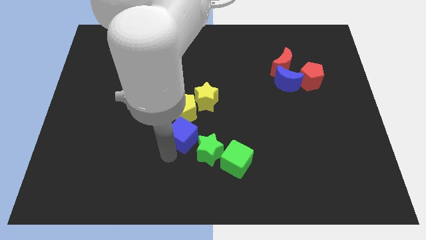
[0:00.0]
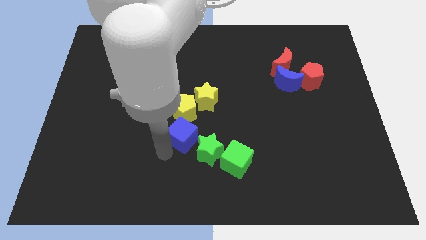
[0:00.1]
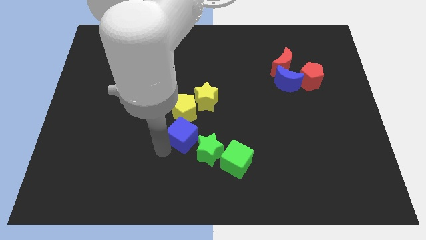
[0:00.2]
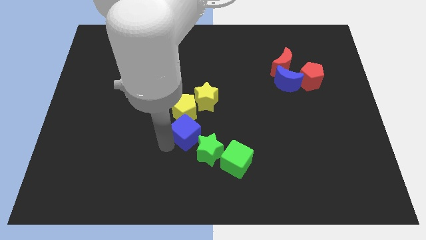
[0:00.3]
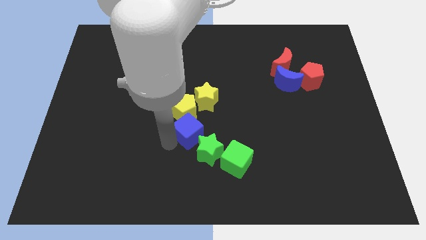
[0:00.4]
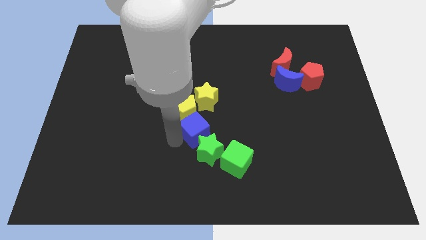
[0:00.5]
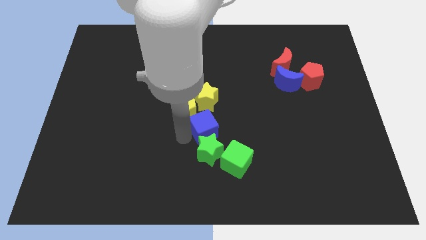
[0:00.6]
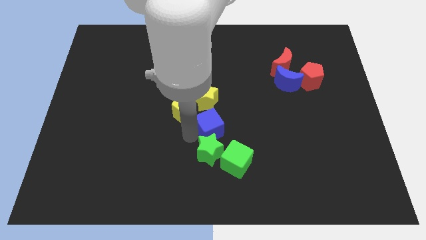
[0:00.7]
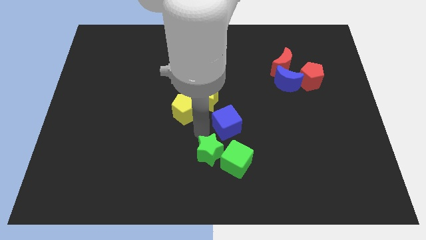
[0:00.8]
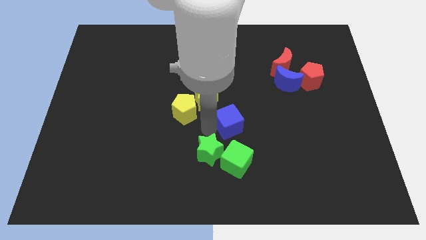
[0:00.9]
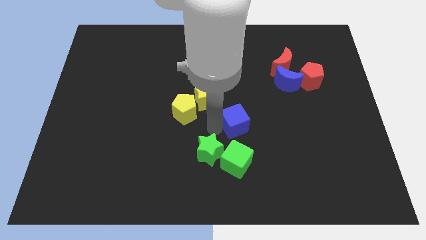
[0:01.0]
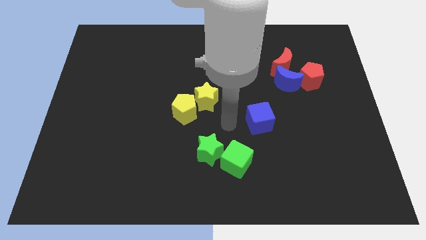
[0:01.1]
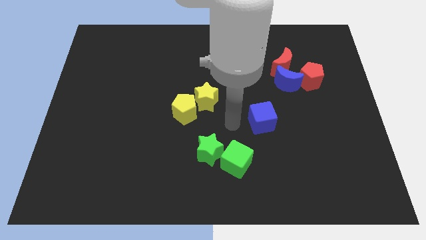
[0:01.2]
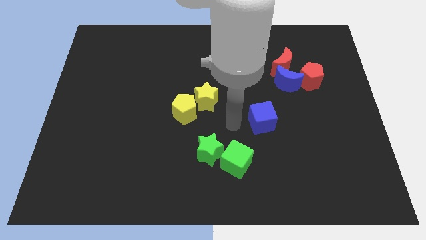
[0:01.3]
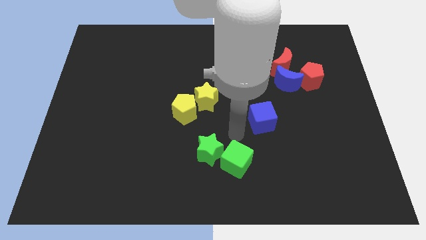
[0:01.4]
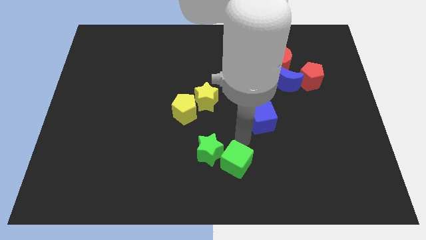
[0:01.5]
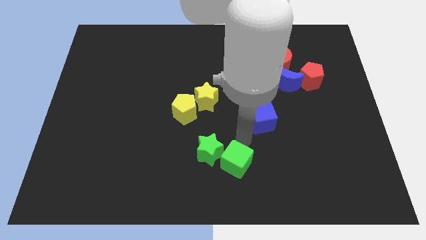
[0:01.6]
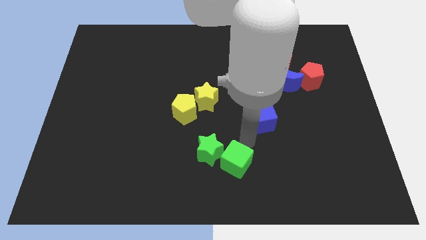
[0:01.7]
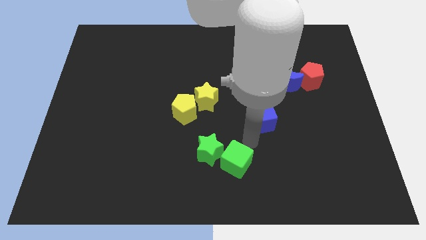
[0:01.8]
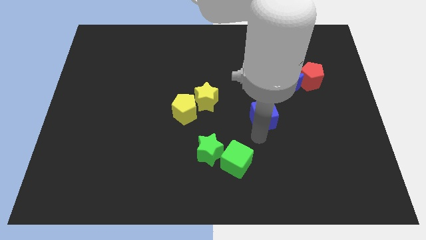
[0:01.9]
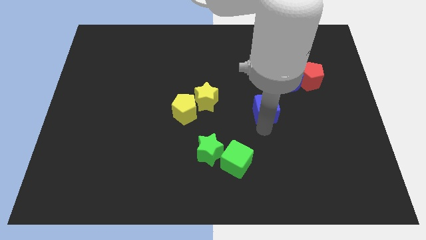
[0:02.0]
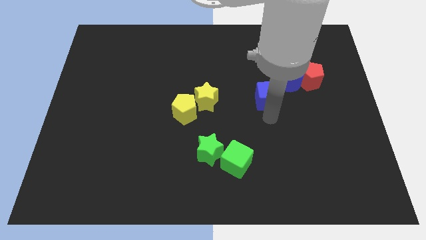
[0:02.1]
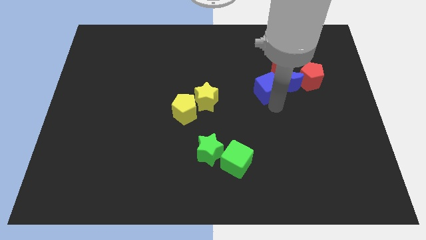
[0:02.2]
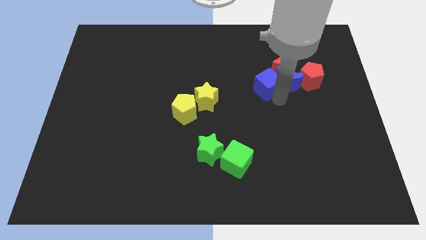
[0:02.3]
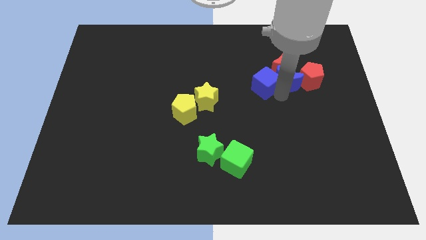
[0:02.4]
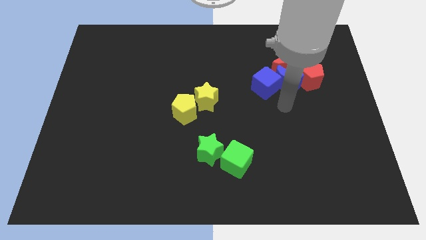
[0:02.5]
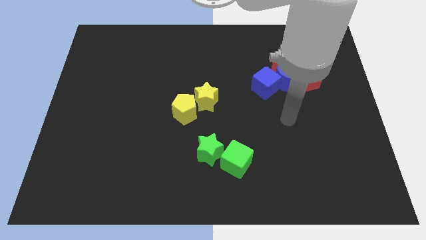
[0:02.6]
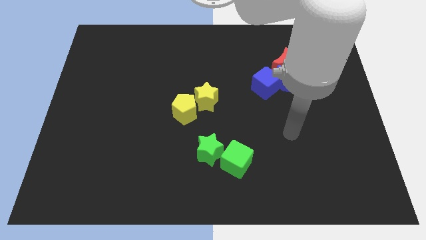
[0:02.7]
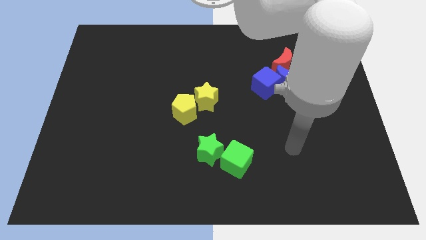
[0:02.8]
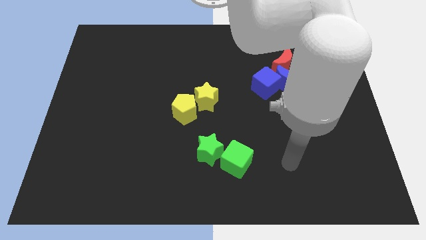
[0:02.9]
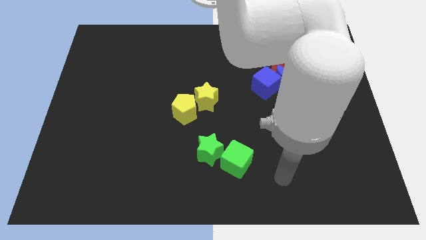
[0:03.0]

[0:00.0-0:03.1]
push the blue cube into the blue moon

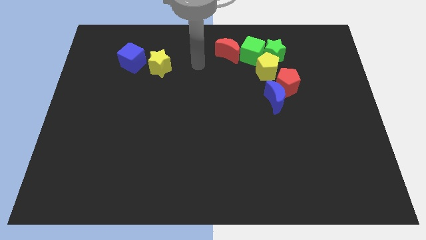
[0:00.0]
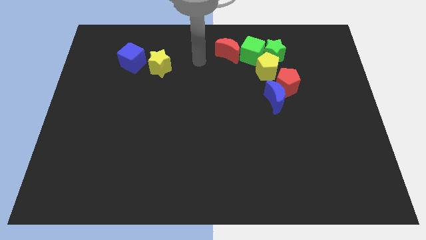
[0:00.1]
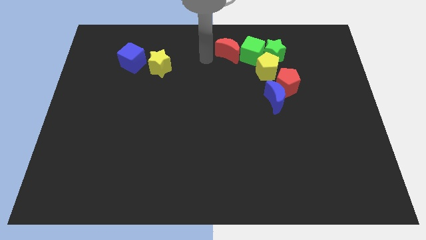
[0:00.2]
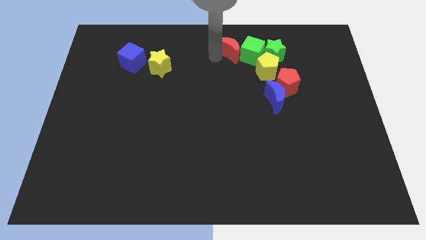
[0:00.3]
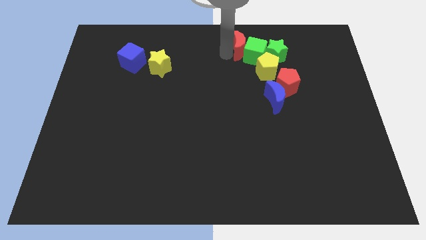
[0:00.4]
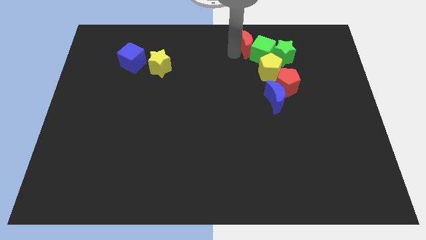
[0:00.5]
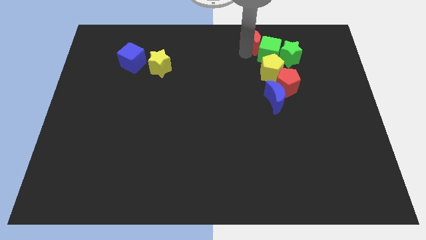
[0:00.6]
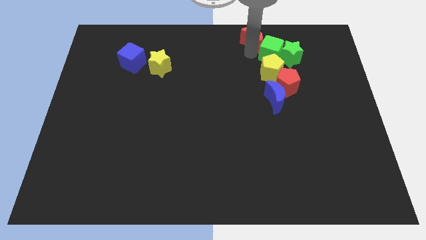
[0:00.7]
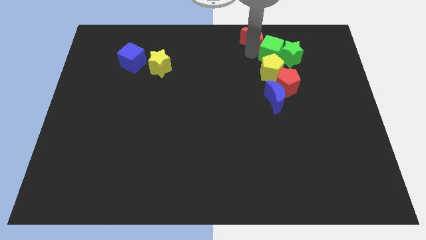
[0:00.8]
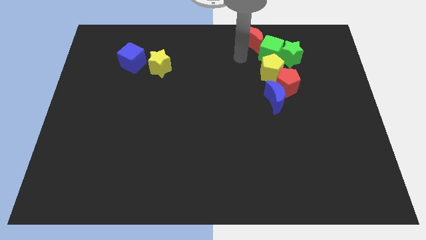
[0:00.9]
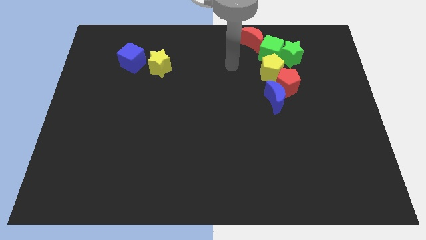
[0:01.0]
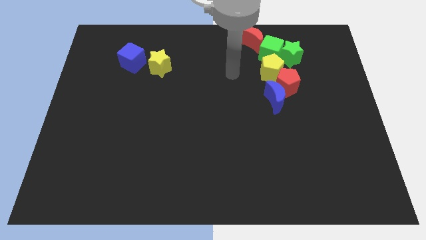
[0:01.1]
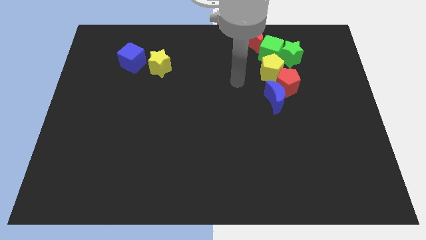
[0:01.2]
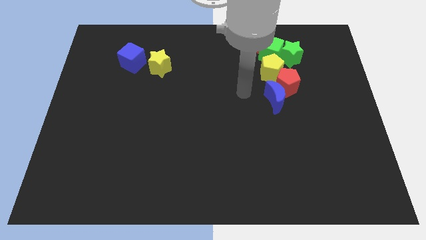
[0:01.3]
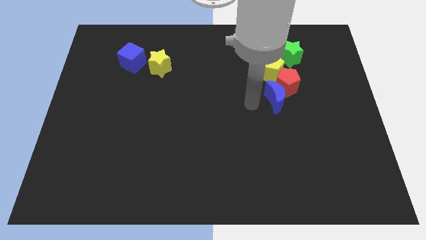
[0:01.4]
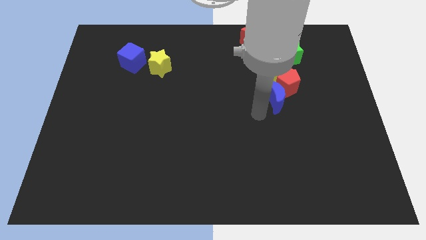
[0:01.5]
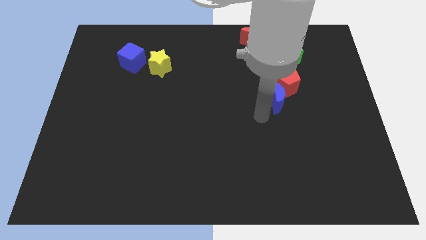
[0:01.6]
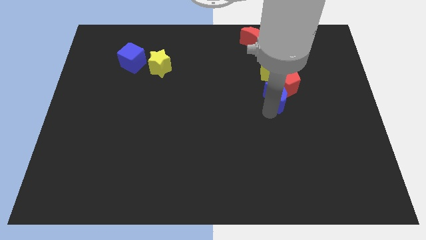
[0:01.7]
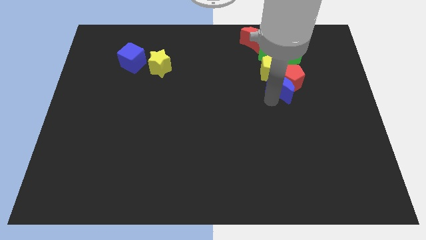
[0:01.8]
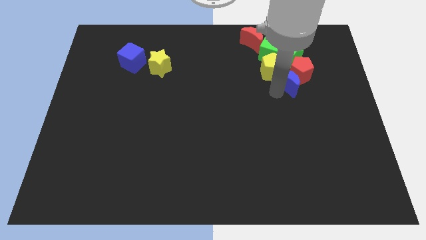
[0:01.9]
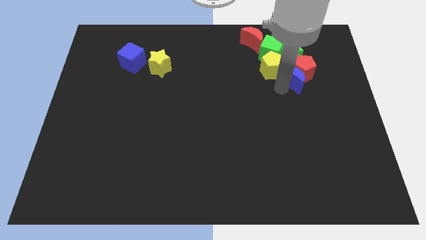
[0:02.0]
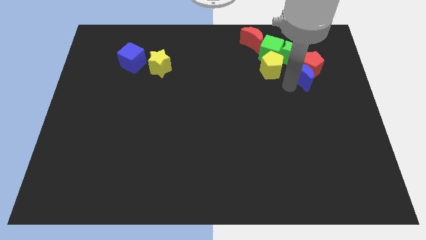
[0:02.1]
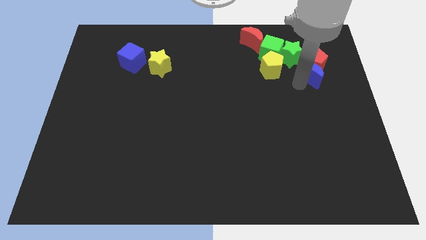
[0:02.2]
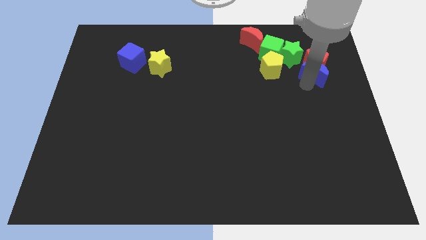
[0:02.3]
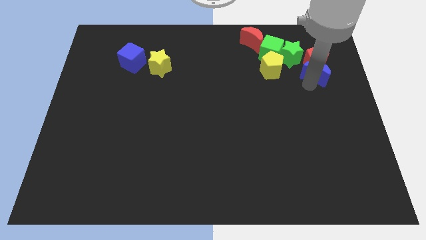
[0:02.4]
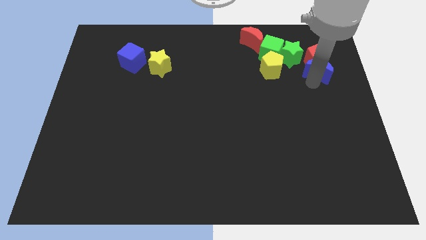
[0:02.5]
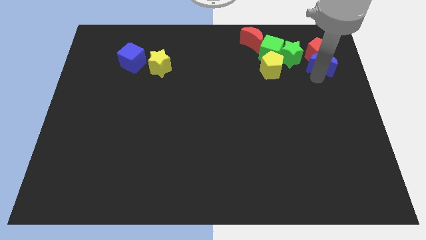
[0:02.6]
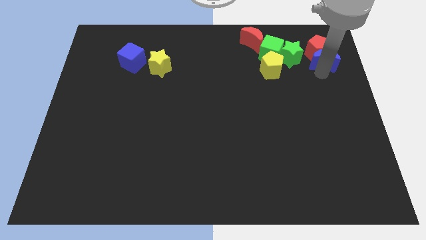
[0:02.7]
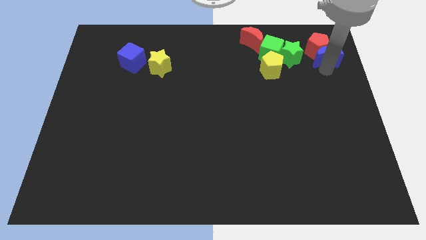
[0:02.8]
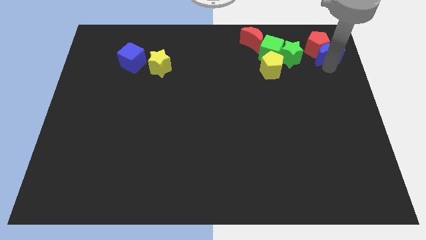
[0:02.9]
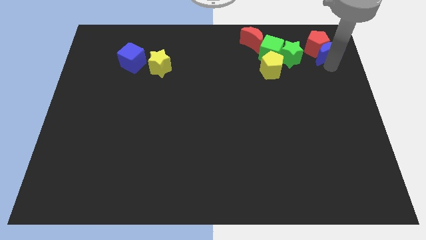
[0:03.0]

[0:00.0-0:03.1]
push the blue crescent along with red pentagon towards top

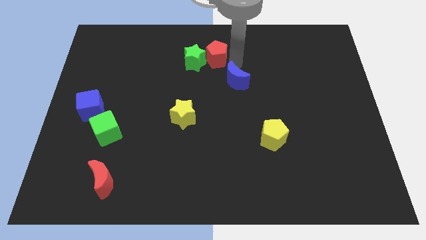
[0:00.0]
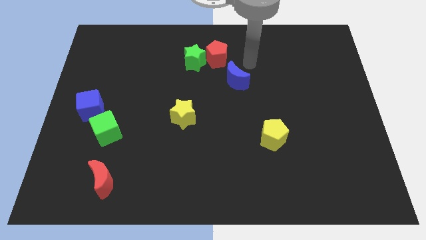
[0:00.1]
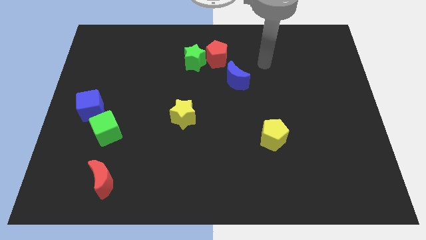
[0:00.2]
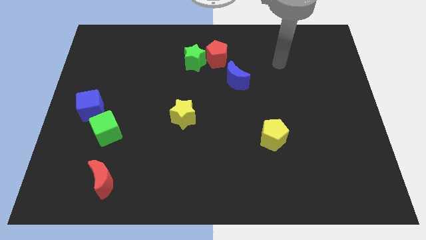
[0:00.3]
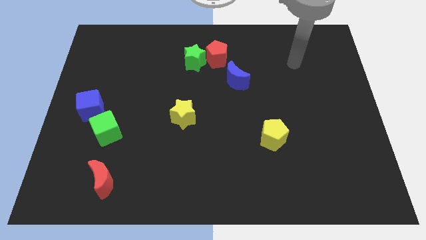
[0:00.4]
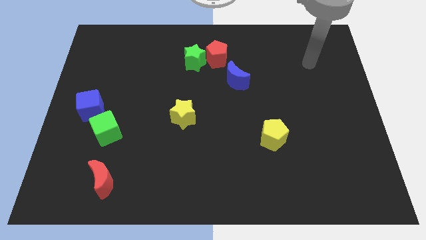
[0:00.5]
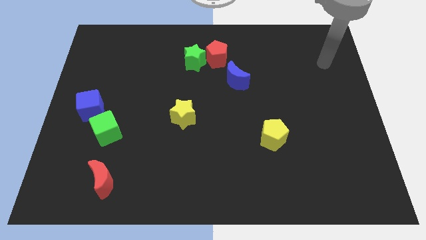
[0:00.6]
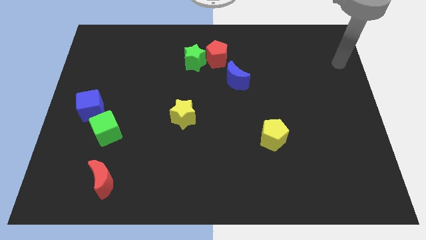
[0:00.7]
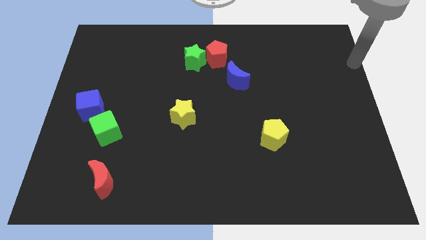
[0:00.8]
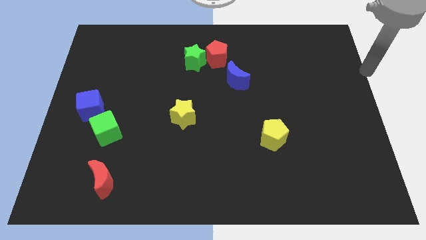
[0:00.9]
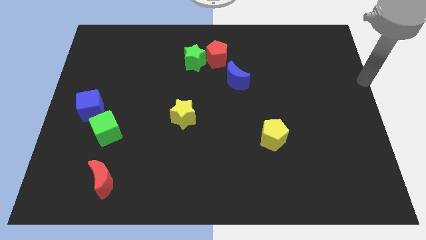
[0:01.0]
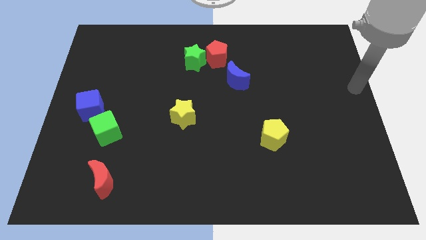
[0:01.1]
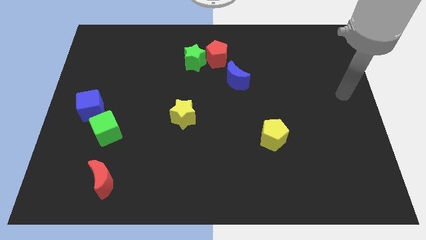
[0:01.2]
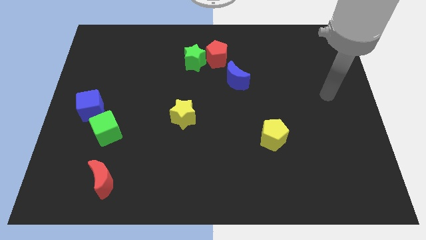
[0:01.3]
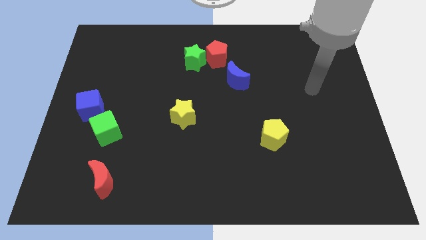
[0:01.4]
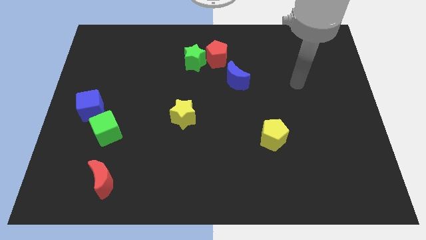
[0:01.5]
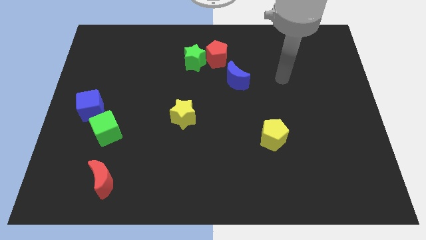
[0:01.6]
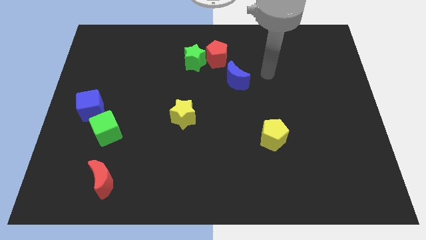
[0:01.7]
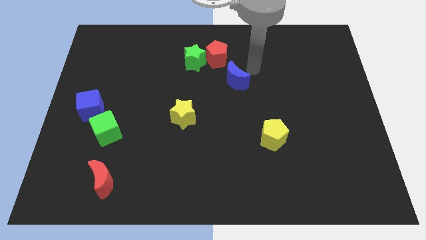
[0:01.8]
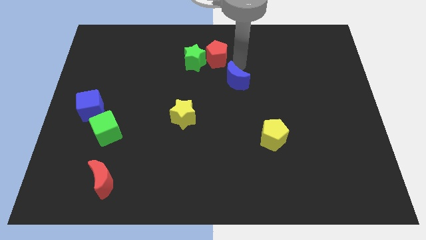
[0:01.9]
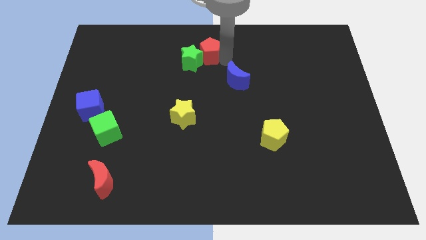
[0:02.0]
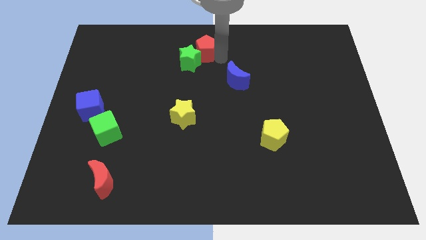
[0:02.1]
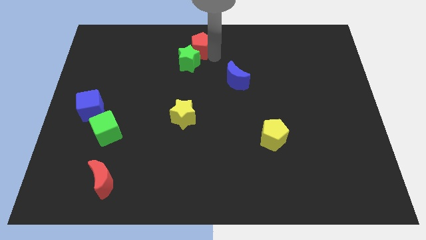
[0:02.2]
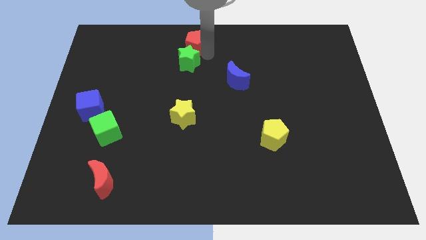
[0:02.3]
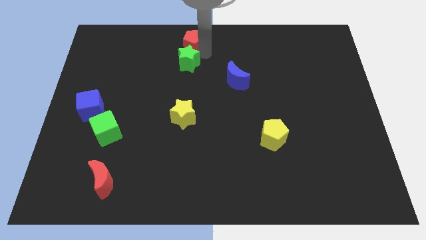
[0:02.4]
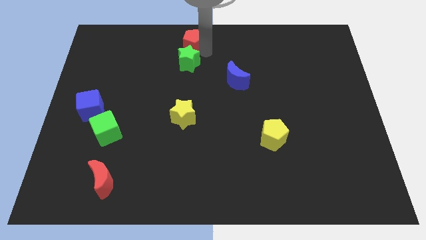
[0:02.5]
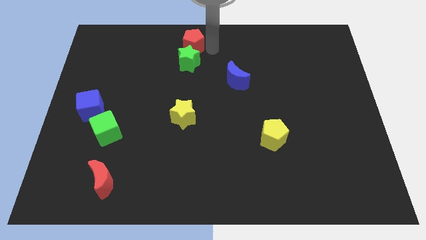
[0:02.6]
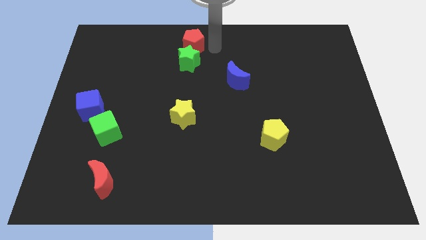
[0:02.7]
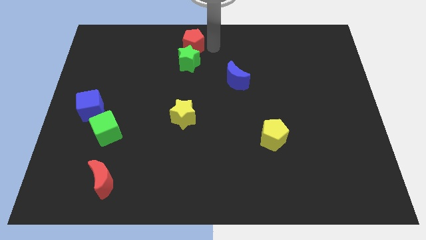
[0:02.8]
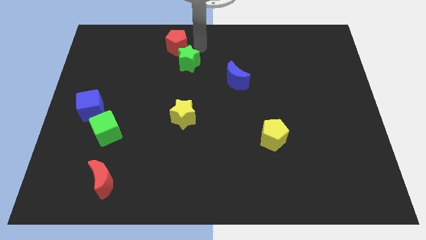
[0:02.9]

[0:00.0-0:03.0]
move the red pentagon to the top of the green star
